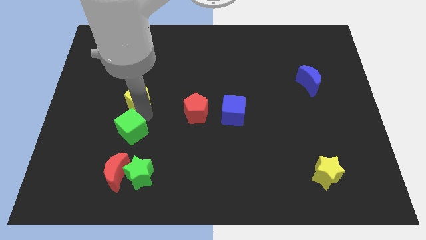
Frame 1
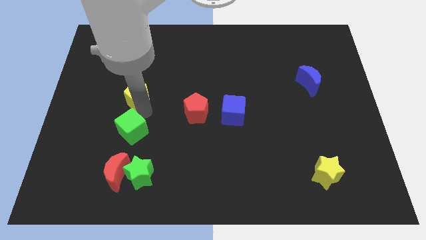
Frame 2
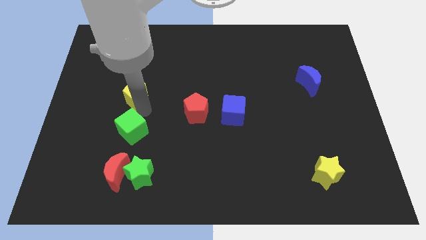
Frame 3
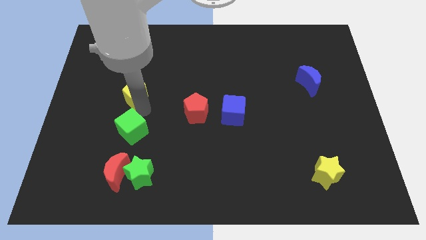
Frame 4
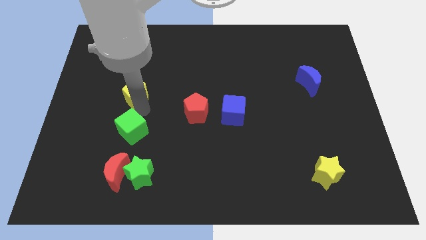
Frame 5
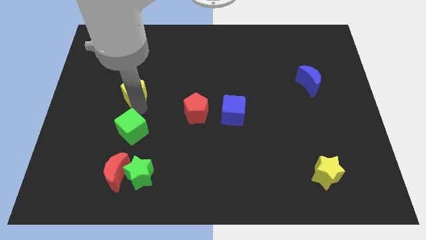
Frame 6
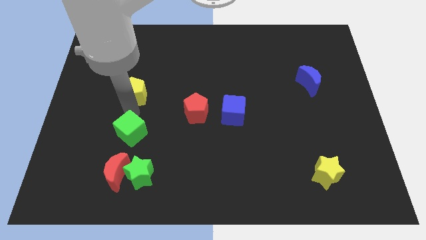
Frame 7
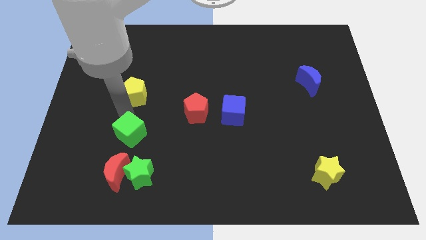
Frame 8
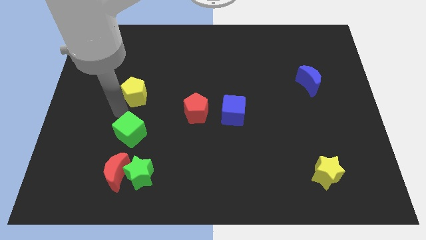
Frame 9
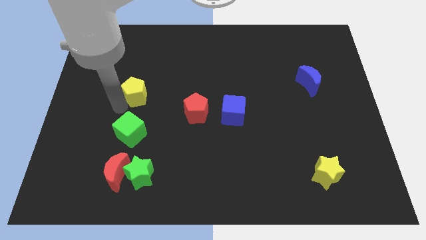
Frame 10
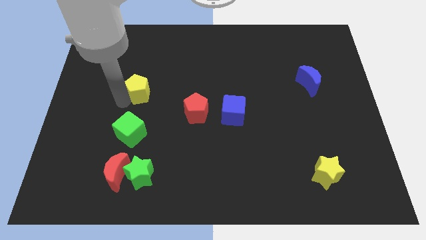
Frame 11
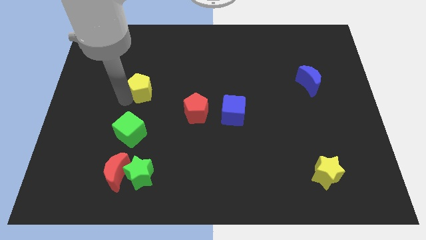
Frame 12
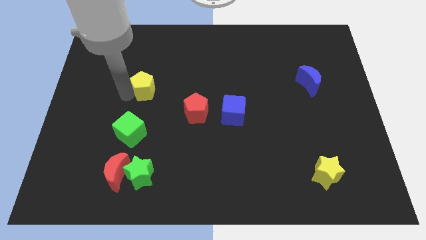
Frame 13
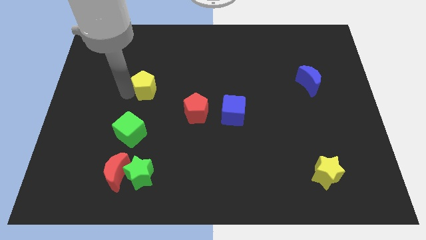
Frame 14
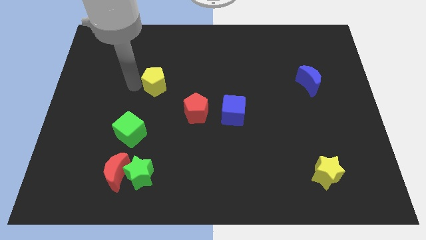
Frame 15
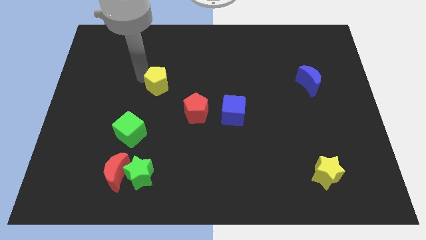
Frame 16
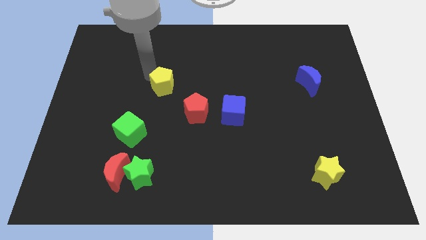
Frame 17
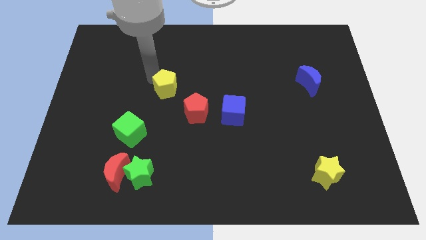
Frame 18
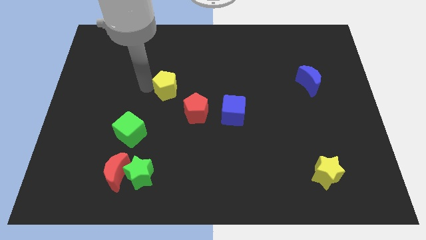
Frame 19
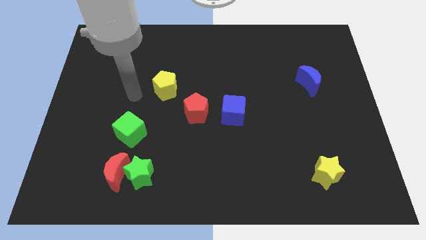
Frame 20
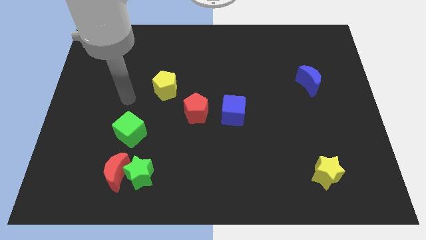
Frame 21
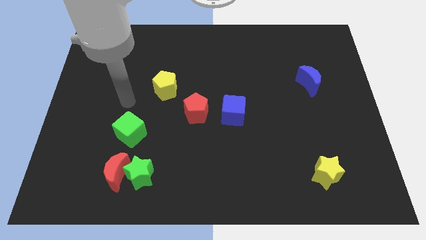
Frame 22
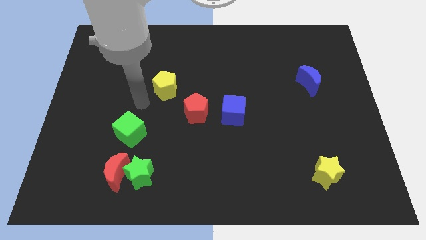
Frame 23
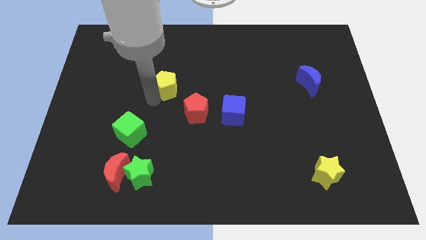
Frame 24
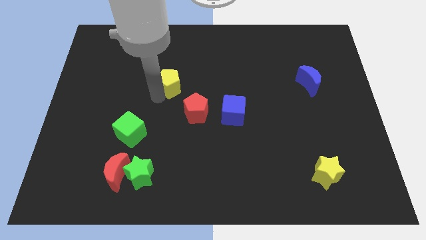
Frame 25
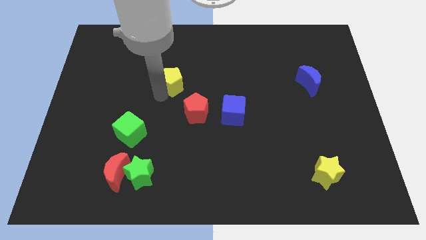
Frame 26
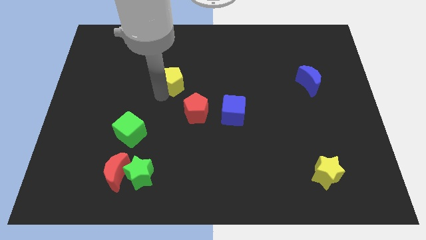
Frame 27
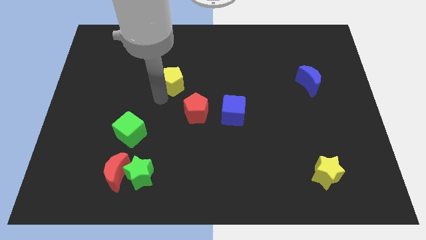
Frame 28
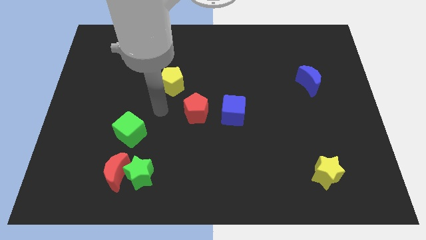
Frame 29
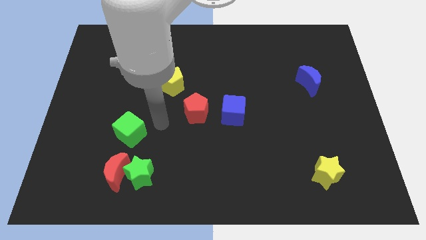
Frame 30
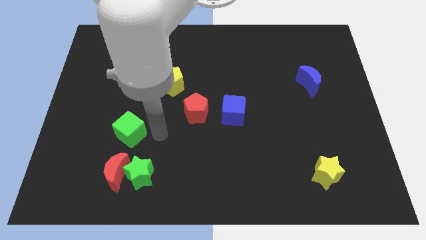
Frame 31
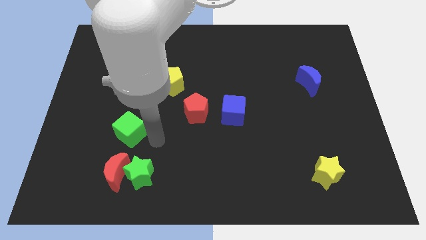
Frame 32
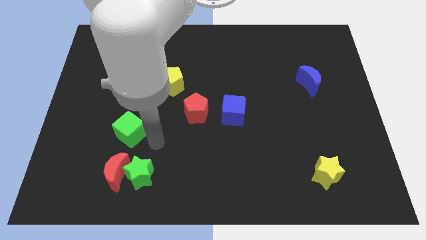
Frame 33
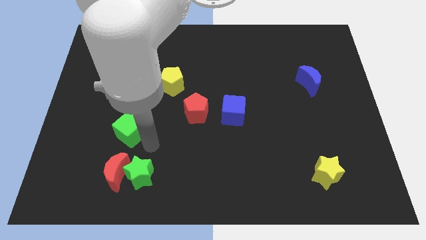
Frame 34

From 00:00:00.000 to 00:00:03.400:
push the yellow pentagon diagonally to the top left of the red pentagon

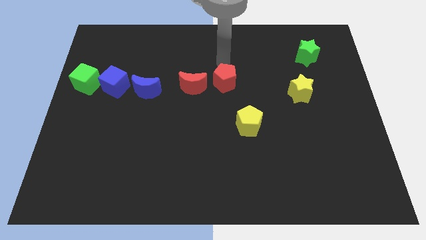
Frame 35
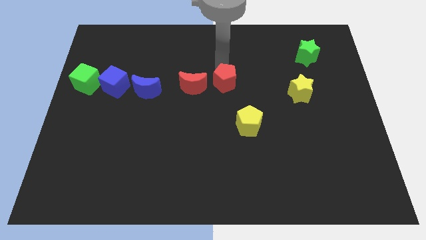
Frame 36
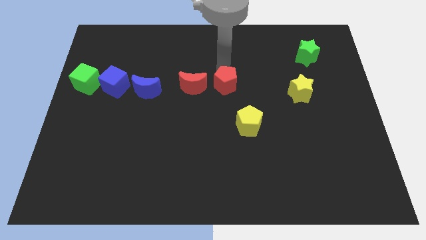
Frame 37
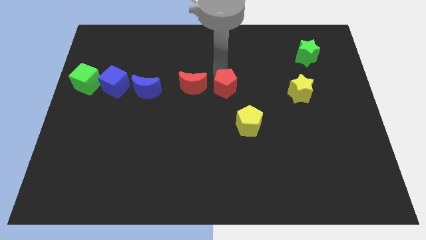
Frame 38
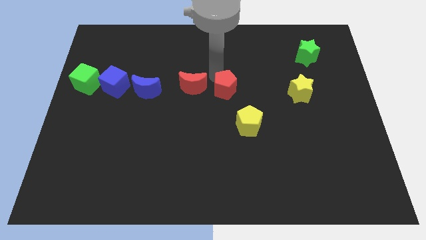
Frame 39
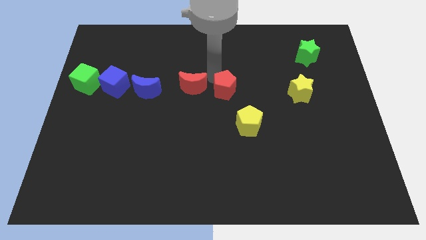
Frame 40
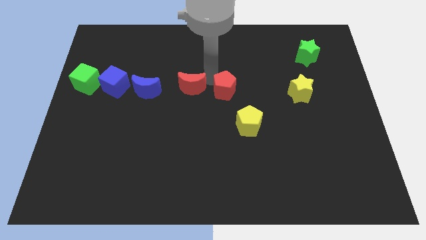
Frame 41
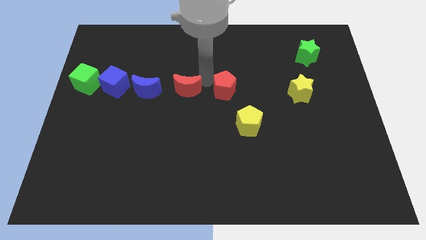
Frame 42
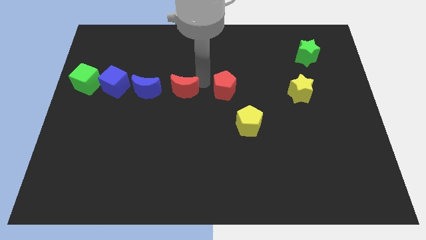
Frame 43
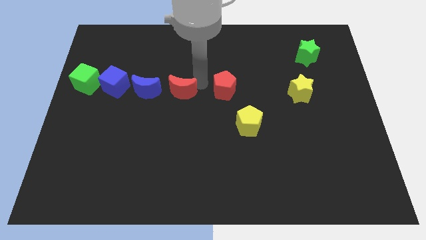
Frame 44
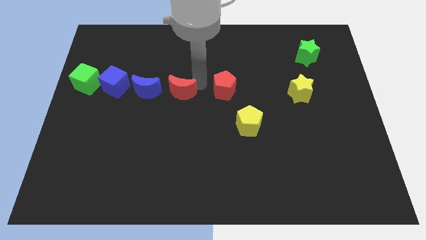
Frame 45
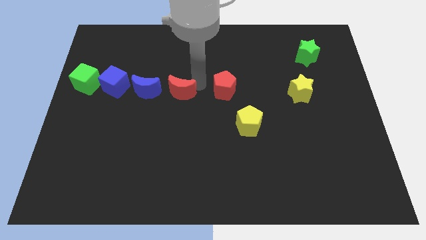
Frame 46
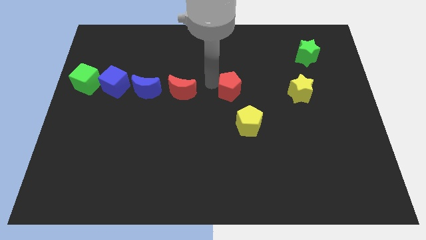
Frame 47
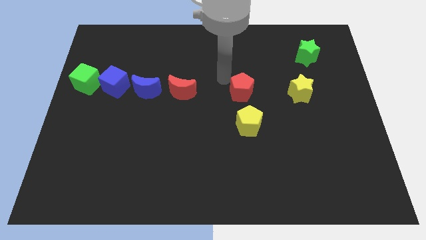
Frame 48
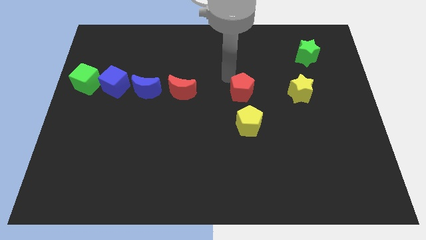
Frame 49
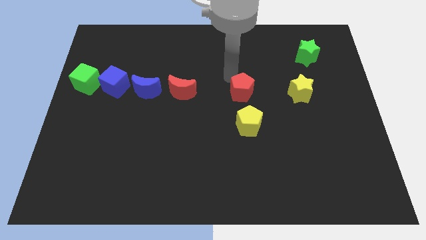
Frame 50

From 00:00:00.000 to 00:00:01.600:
separate the red pentagon from the red crescent

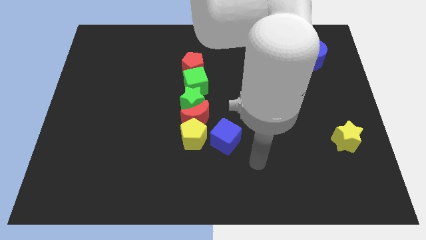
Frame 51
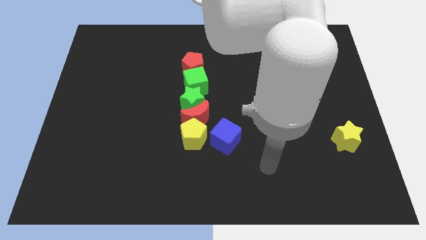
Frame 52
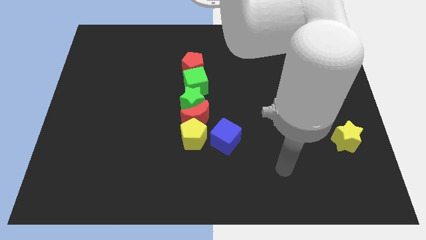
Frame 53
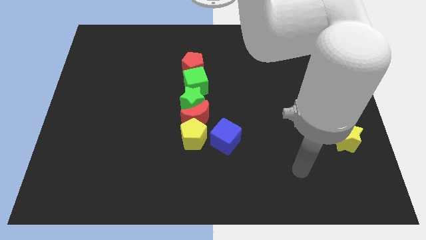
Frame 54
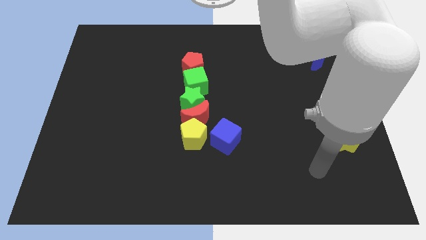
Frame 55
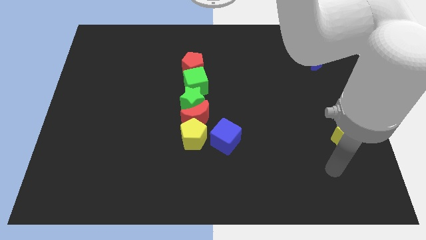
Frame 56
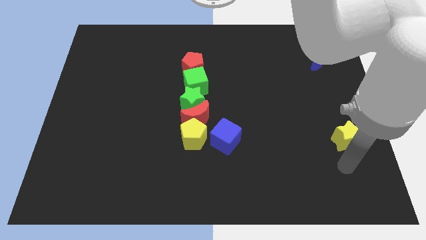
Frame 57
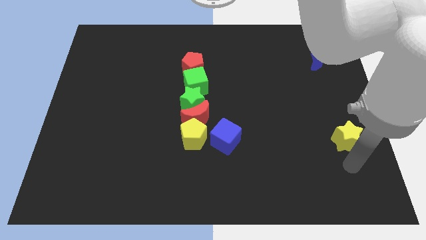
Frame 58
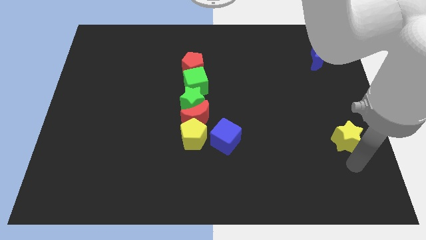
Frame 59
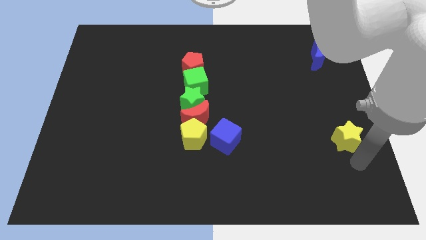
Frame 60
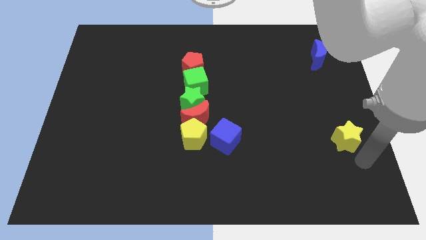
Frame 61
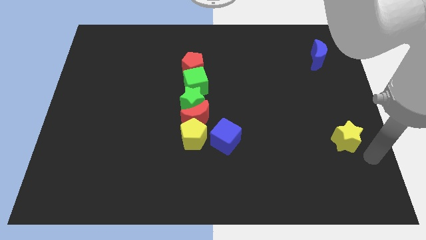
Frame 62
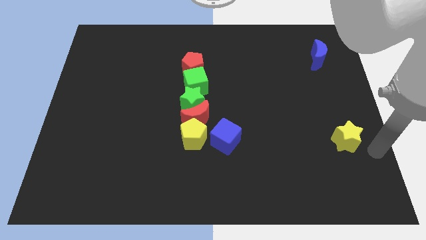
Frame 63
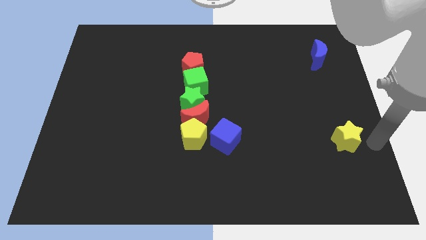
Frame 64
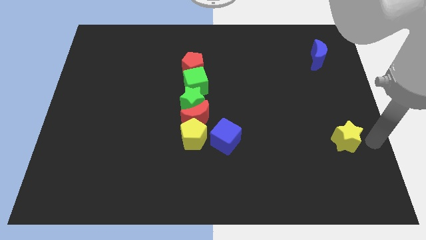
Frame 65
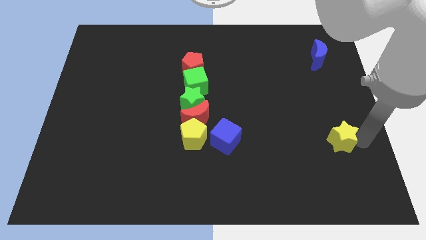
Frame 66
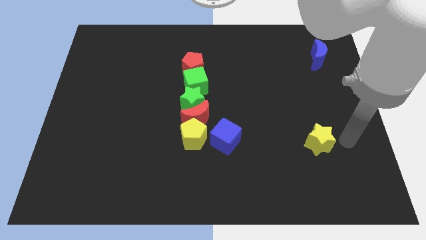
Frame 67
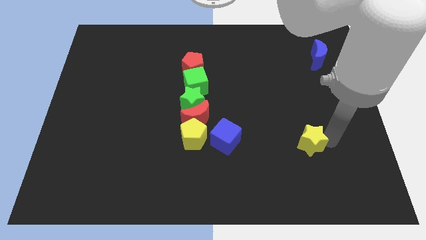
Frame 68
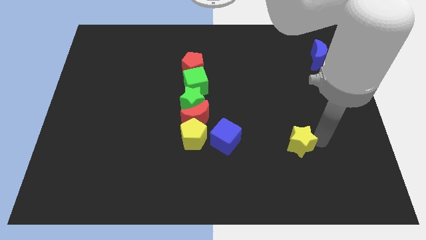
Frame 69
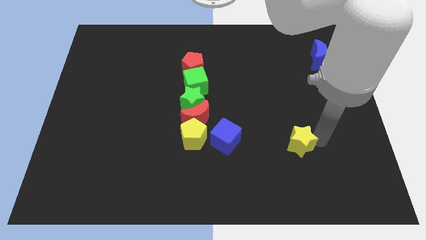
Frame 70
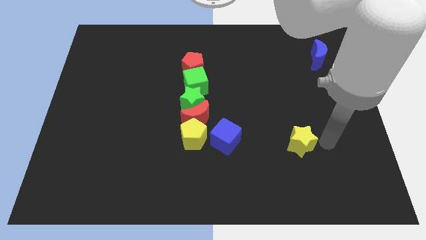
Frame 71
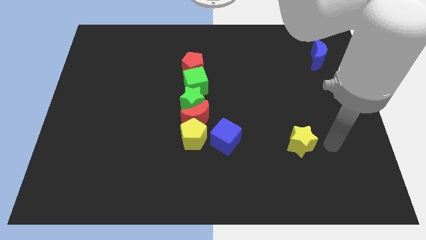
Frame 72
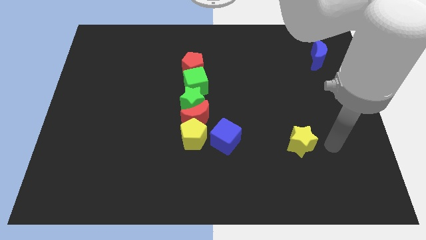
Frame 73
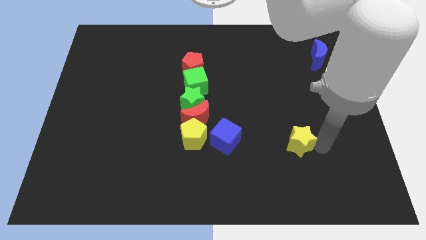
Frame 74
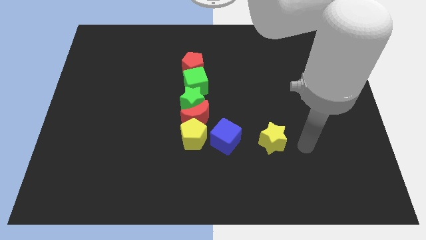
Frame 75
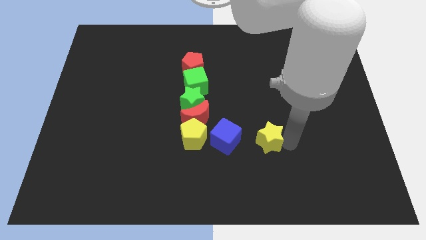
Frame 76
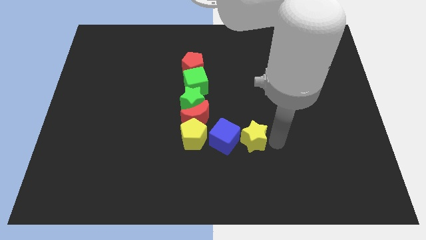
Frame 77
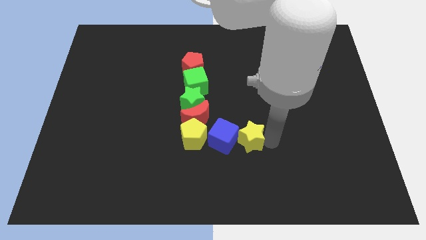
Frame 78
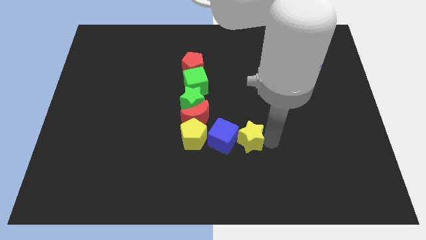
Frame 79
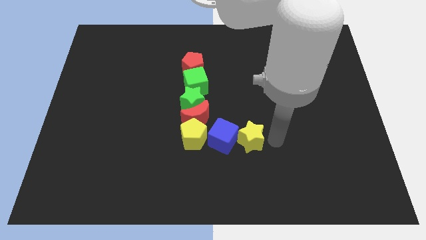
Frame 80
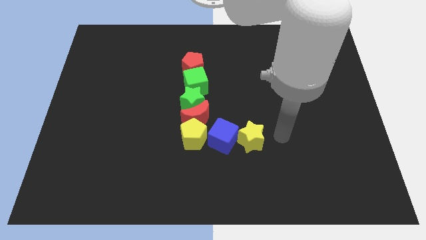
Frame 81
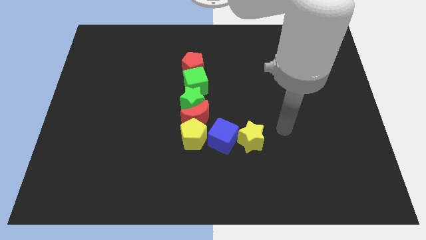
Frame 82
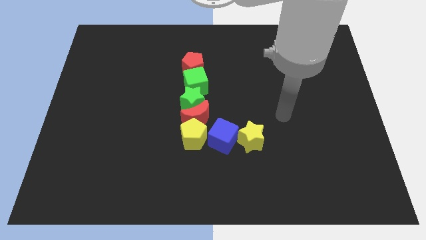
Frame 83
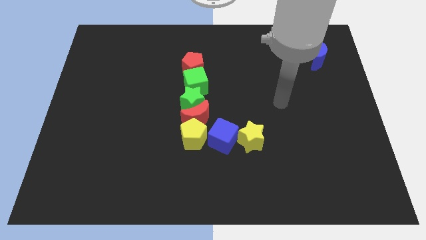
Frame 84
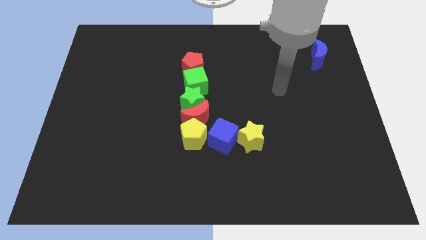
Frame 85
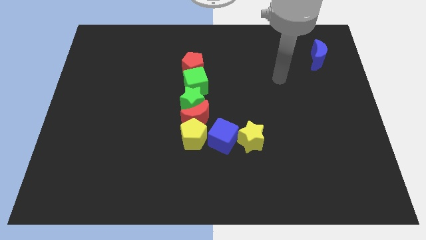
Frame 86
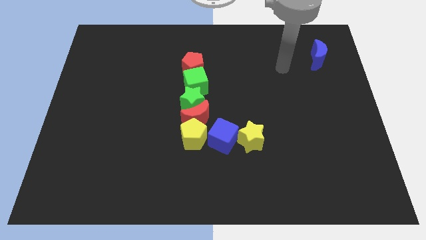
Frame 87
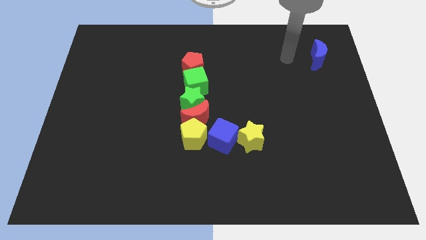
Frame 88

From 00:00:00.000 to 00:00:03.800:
move the yellow star to the left side of the blue cube

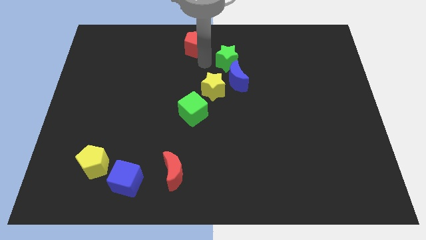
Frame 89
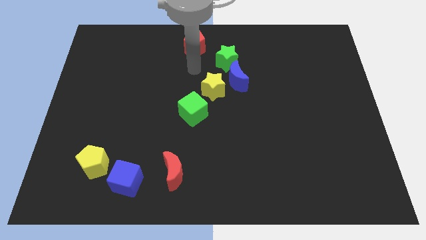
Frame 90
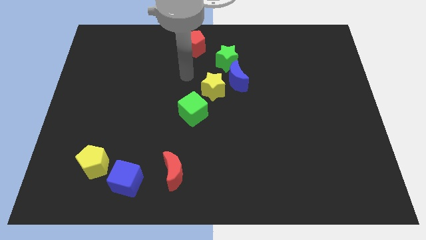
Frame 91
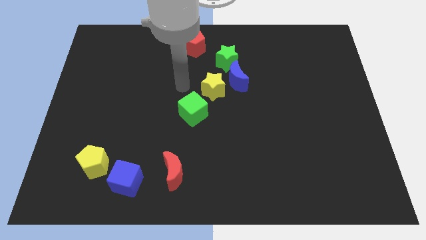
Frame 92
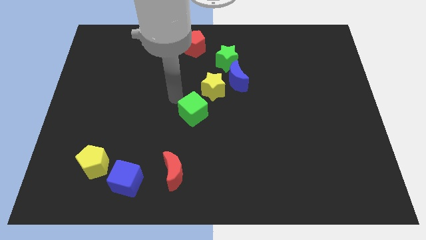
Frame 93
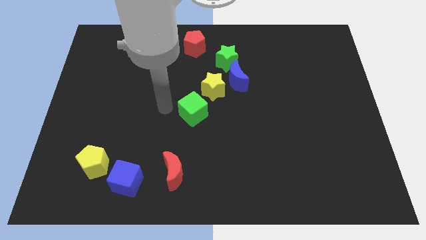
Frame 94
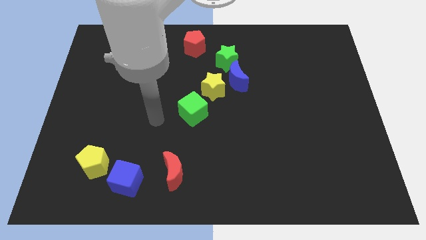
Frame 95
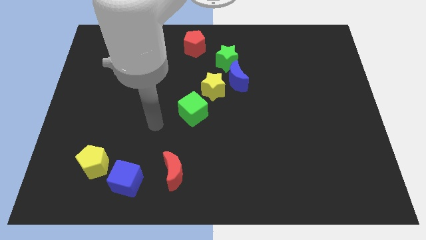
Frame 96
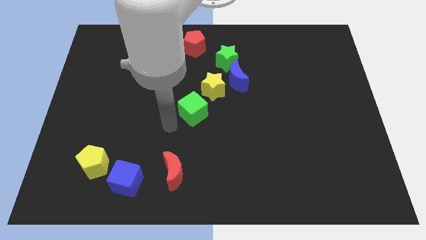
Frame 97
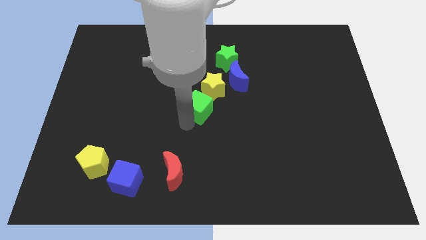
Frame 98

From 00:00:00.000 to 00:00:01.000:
place your arm to the bottom of the green cube
